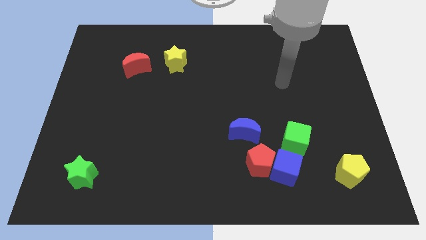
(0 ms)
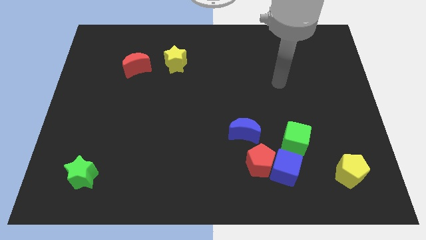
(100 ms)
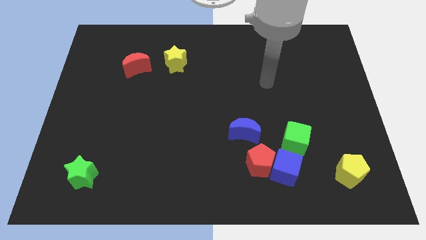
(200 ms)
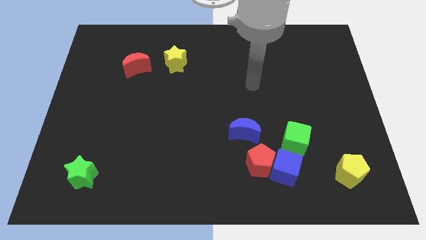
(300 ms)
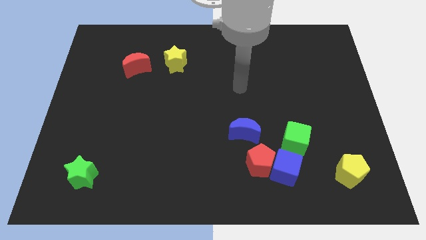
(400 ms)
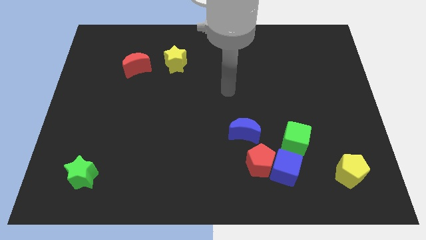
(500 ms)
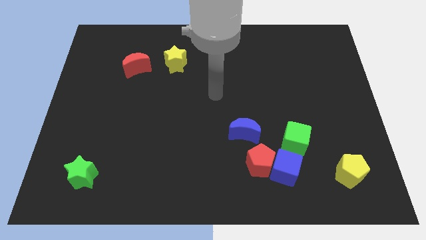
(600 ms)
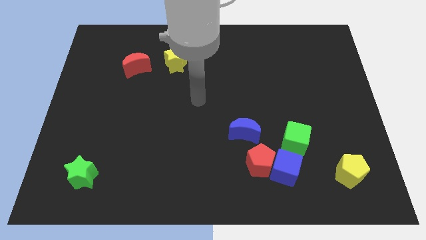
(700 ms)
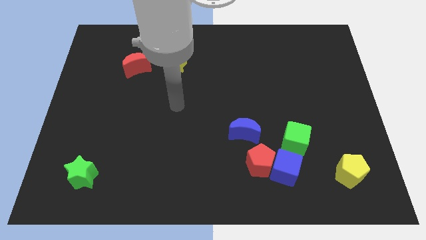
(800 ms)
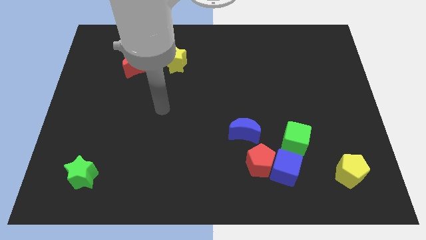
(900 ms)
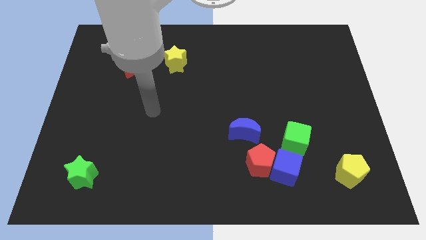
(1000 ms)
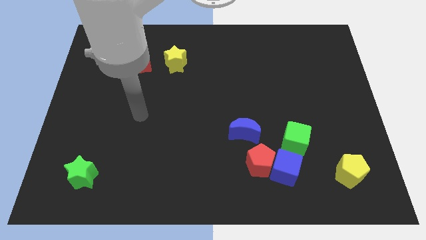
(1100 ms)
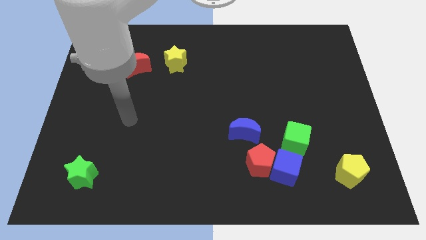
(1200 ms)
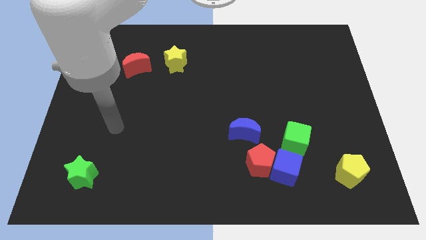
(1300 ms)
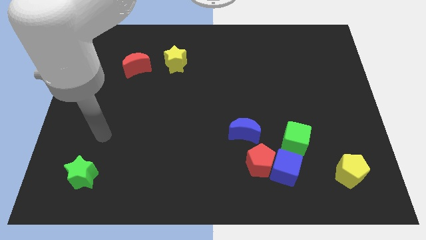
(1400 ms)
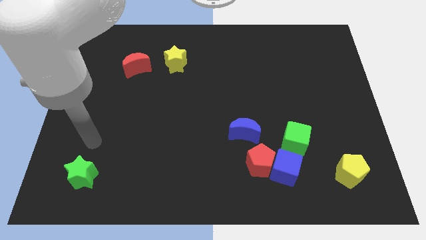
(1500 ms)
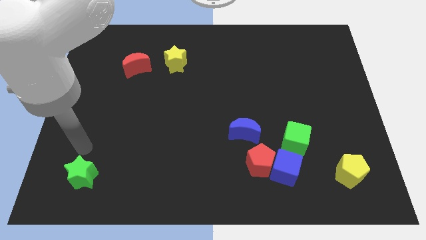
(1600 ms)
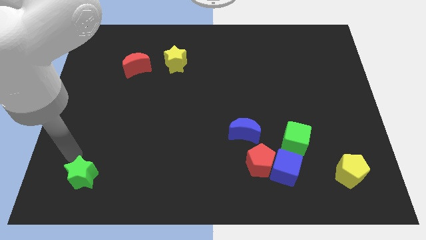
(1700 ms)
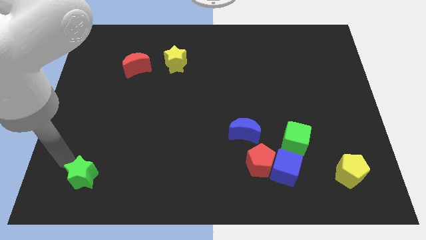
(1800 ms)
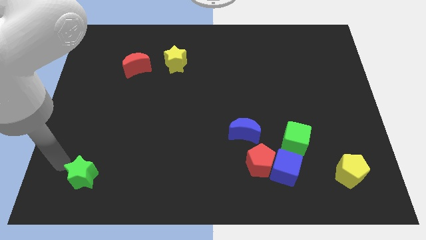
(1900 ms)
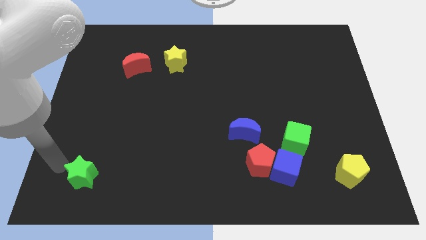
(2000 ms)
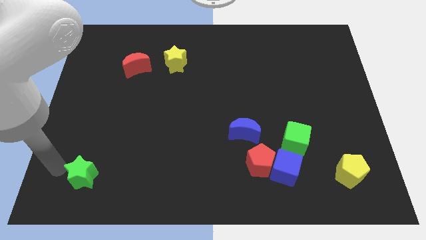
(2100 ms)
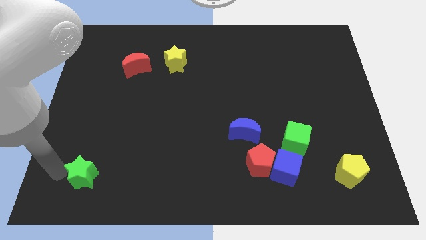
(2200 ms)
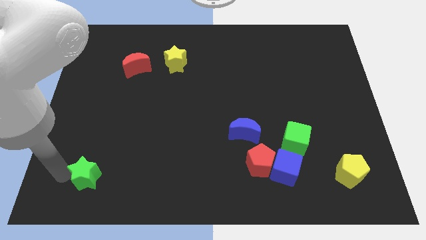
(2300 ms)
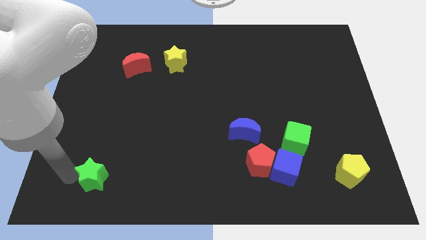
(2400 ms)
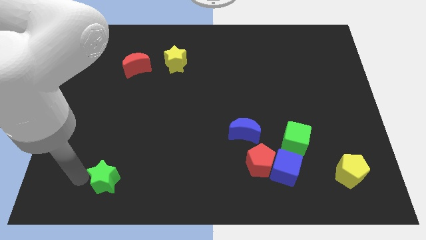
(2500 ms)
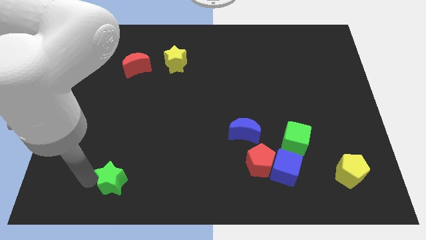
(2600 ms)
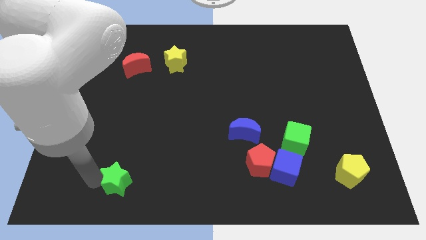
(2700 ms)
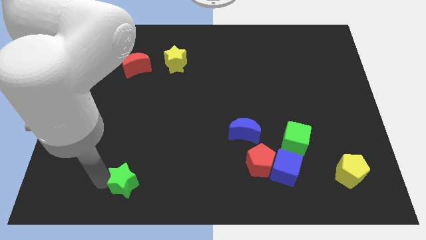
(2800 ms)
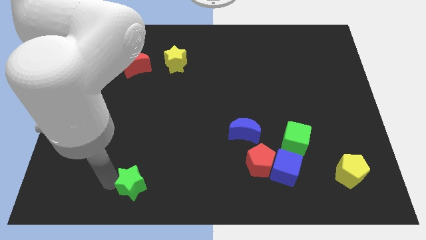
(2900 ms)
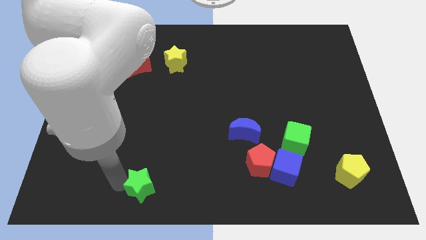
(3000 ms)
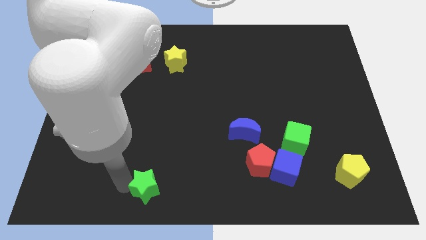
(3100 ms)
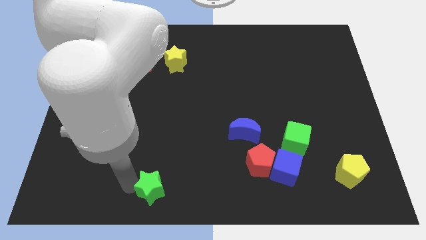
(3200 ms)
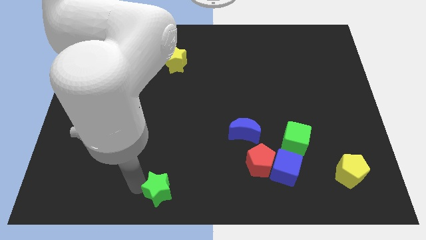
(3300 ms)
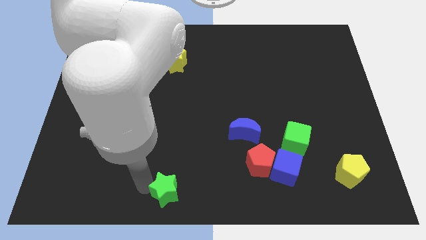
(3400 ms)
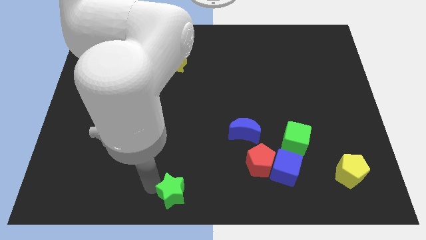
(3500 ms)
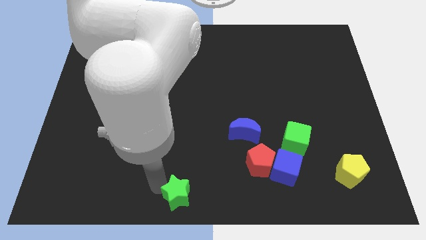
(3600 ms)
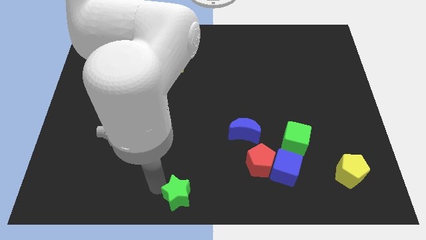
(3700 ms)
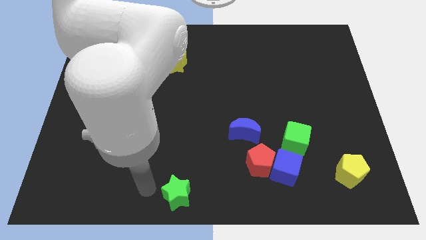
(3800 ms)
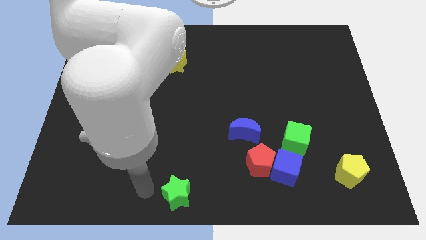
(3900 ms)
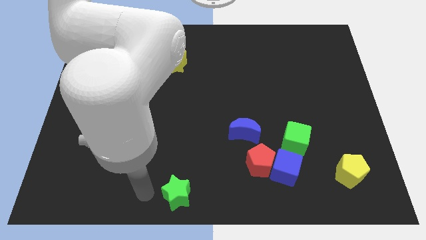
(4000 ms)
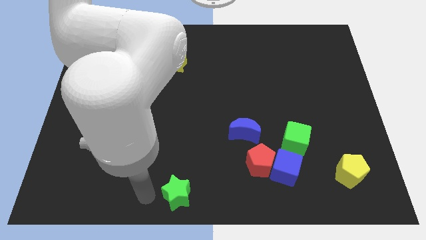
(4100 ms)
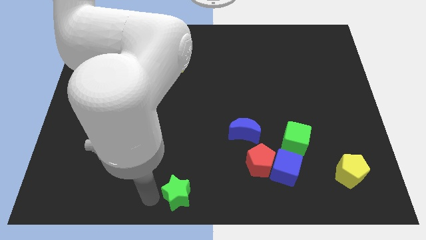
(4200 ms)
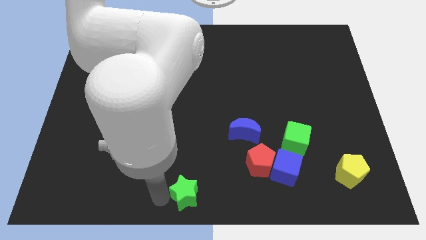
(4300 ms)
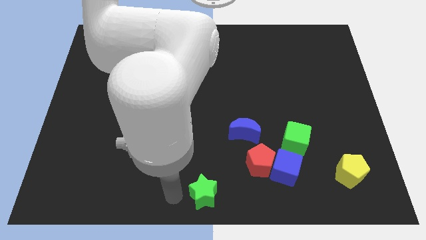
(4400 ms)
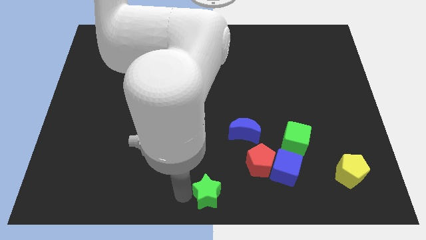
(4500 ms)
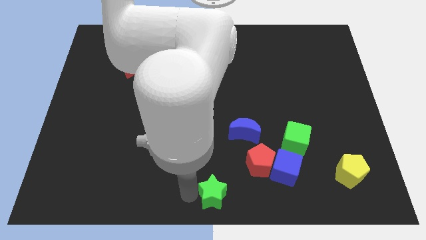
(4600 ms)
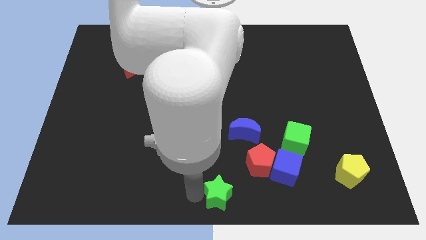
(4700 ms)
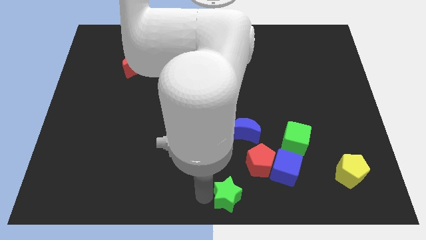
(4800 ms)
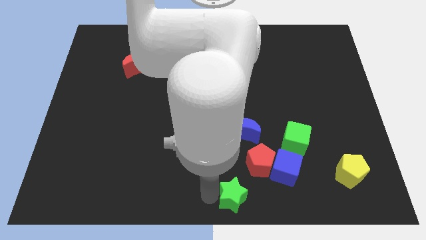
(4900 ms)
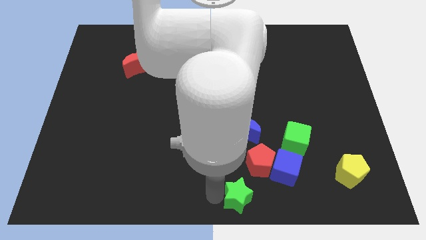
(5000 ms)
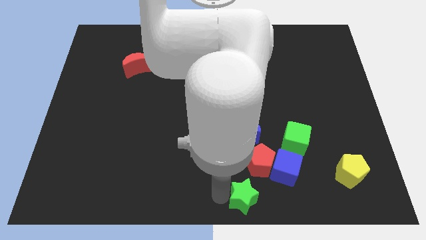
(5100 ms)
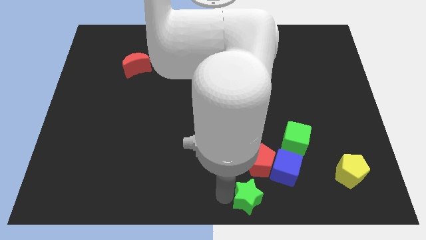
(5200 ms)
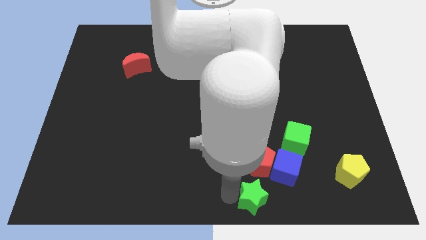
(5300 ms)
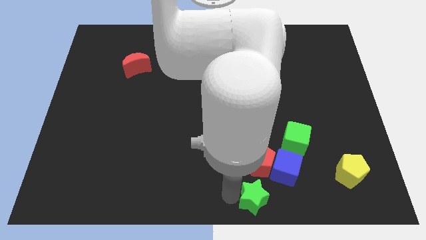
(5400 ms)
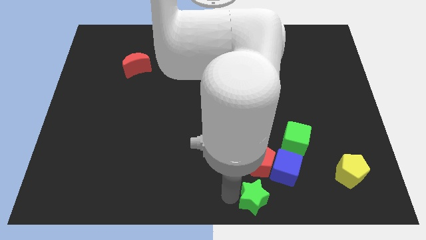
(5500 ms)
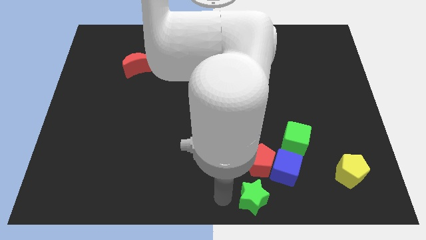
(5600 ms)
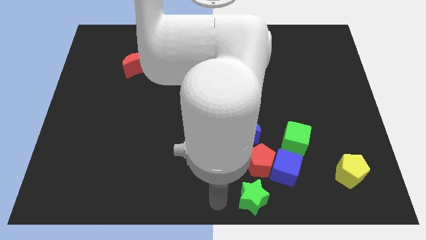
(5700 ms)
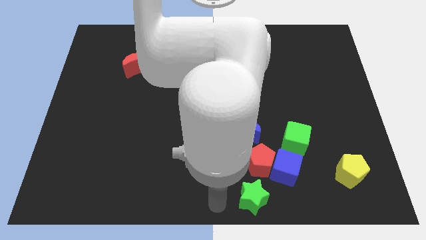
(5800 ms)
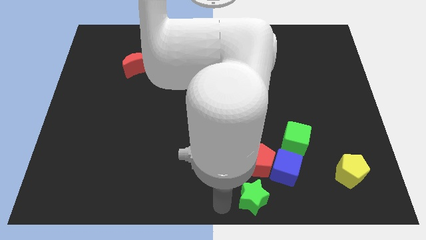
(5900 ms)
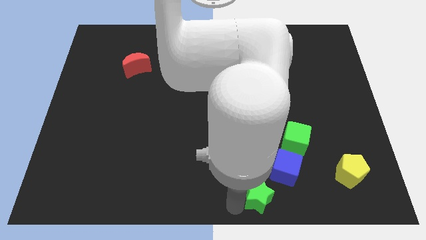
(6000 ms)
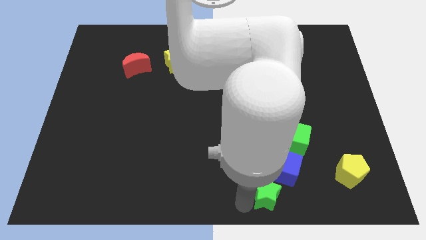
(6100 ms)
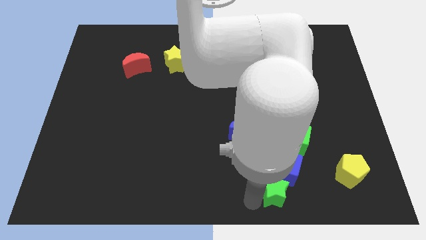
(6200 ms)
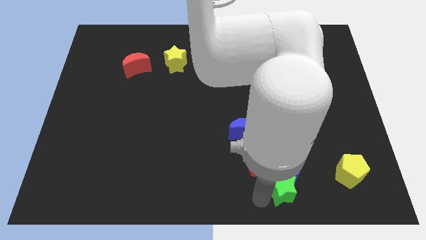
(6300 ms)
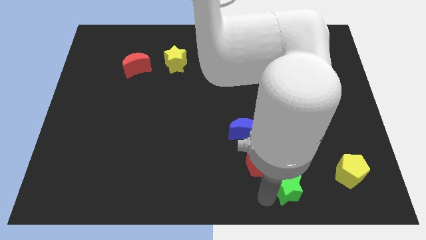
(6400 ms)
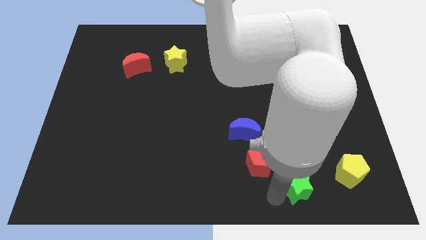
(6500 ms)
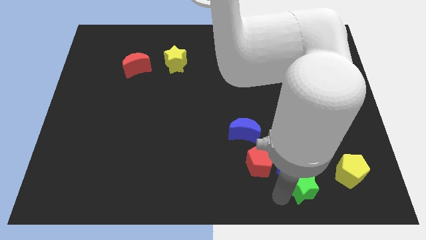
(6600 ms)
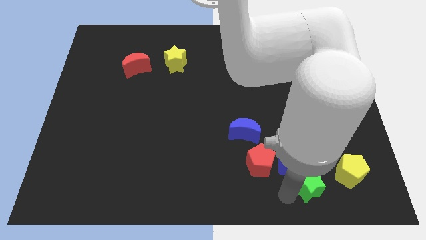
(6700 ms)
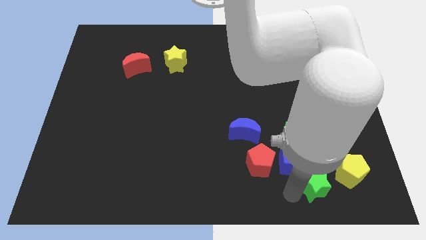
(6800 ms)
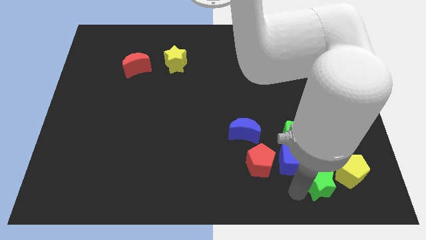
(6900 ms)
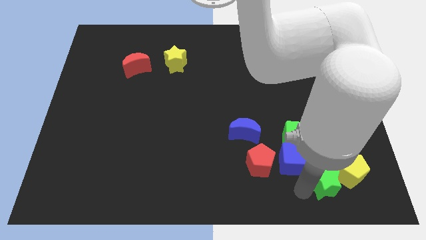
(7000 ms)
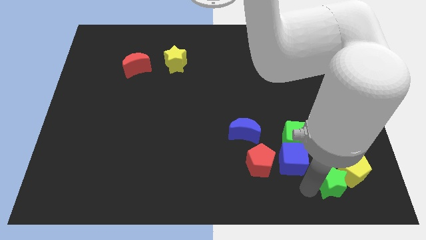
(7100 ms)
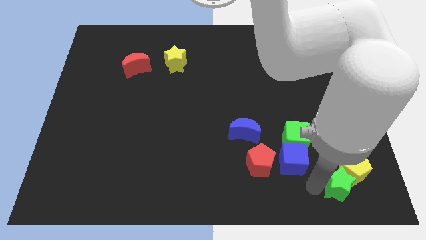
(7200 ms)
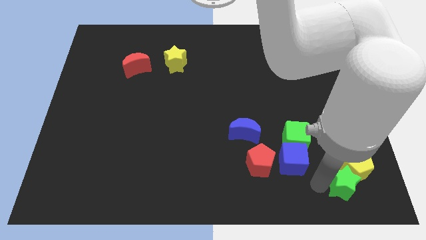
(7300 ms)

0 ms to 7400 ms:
push the green star towards the yellow pentagon

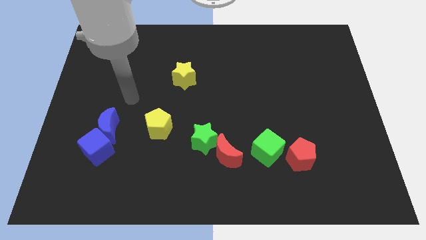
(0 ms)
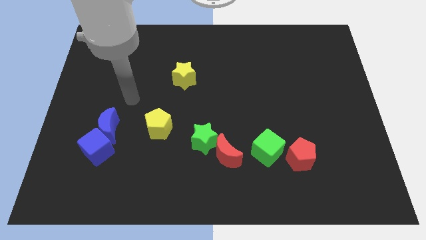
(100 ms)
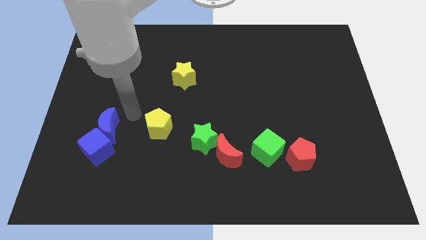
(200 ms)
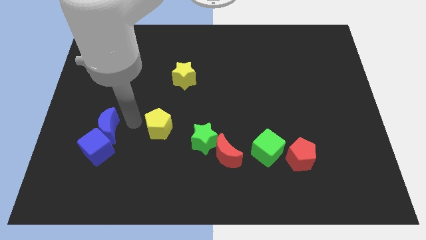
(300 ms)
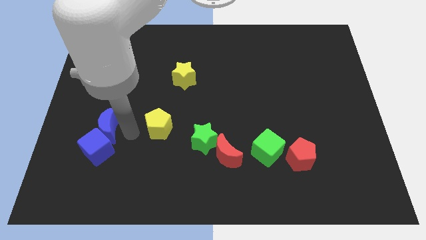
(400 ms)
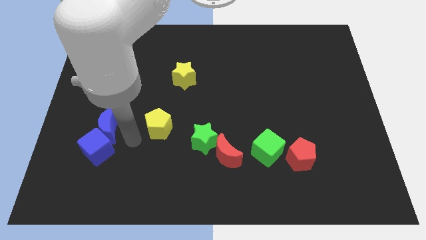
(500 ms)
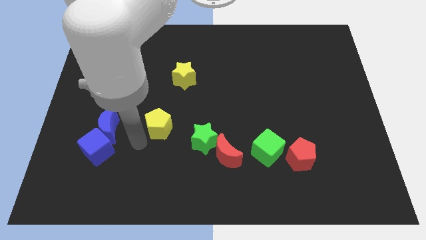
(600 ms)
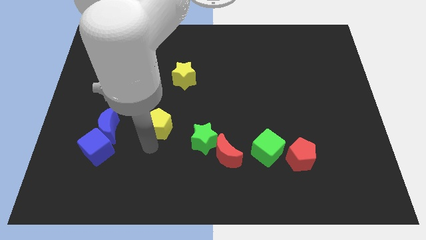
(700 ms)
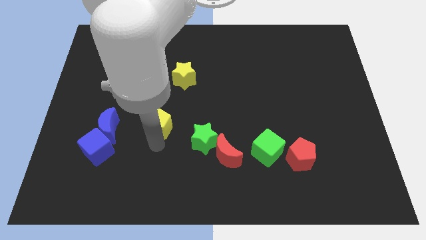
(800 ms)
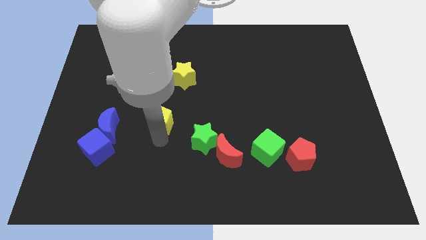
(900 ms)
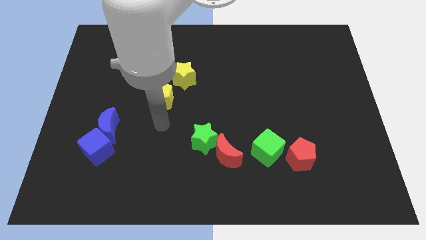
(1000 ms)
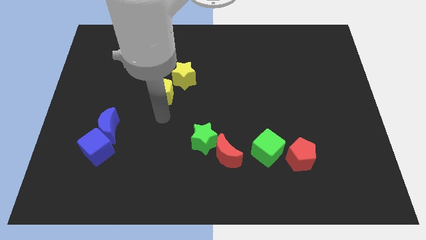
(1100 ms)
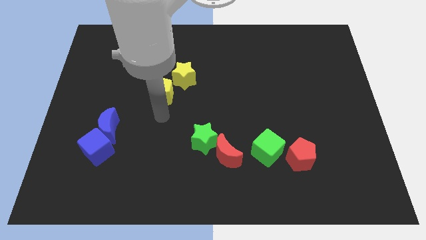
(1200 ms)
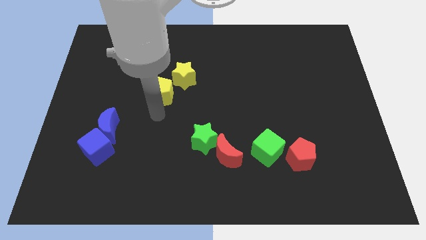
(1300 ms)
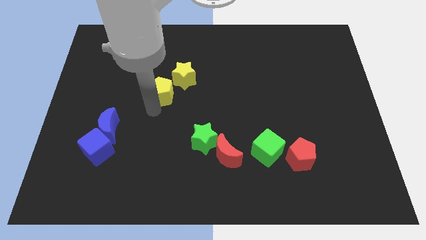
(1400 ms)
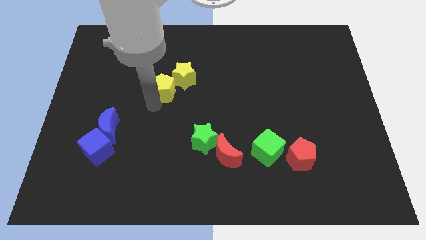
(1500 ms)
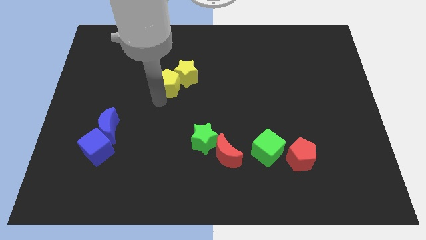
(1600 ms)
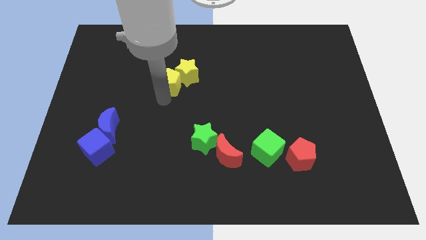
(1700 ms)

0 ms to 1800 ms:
put the yellow pentagon next to the yellow star
